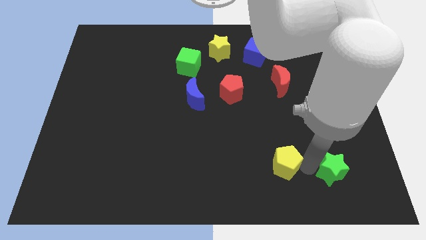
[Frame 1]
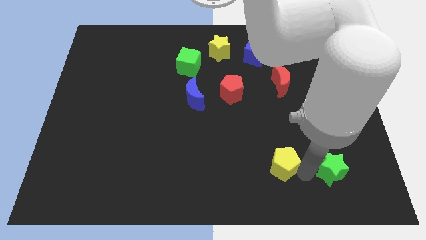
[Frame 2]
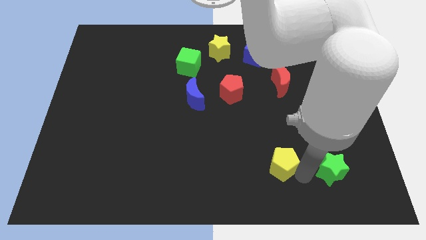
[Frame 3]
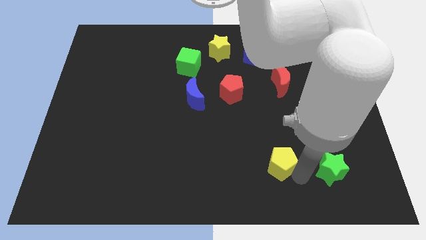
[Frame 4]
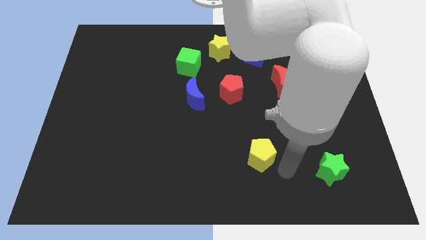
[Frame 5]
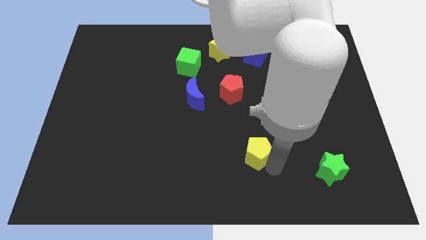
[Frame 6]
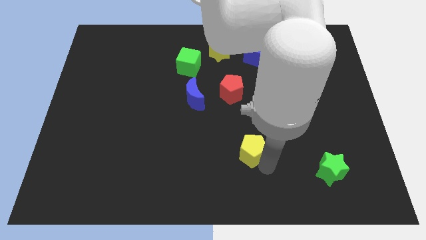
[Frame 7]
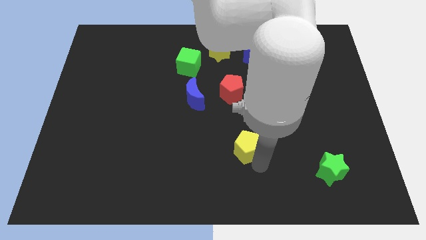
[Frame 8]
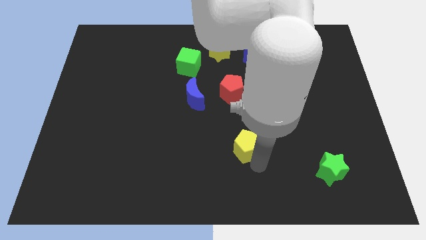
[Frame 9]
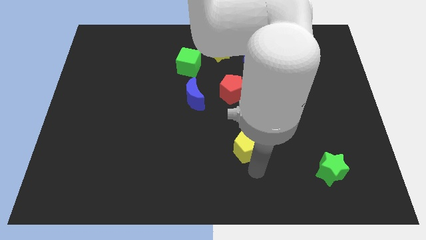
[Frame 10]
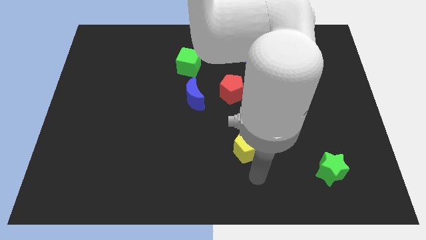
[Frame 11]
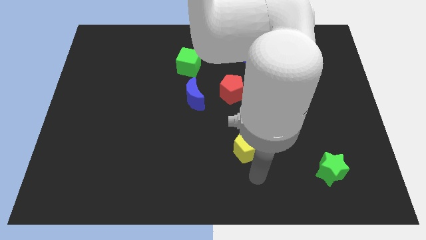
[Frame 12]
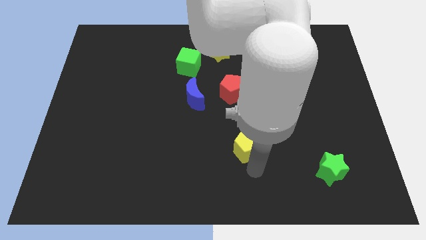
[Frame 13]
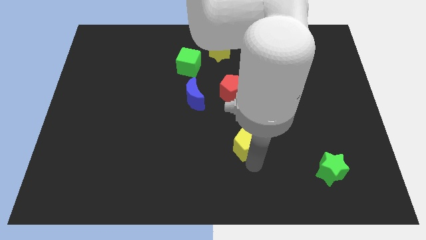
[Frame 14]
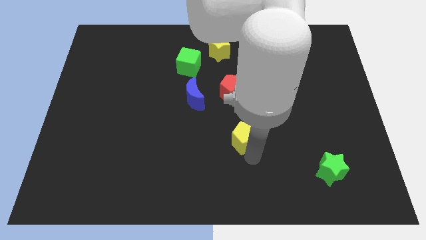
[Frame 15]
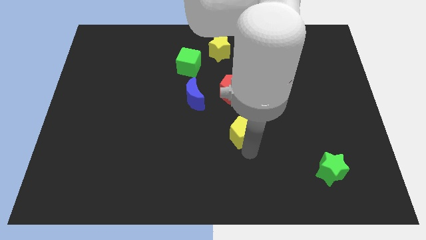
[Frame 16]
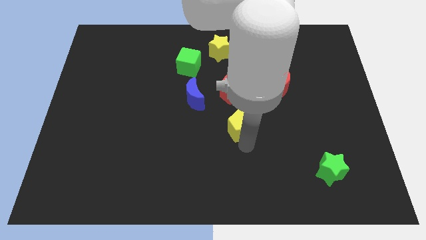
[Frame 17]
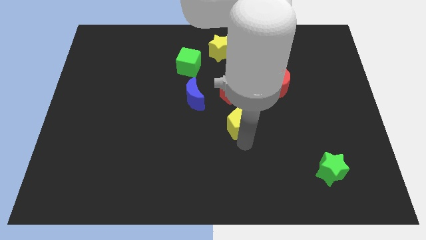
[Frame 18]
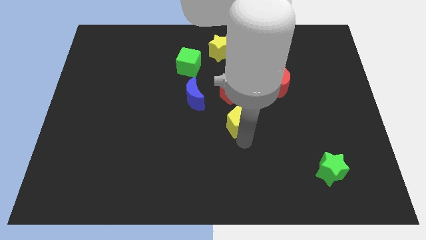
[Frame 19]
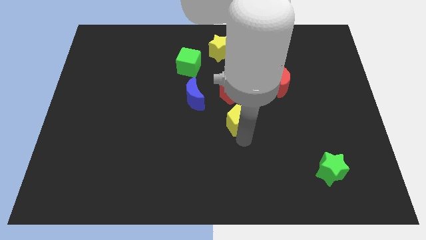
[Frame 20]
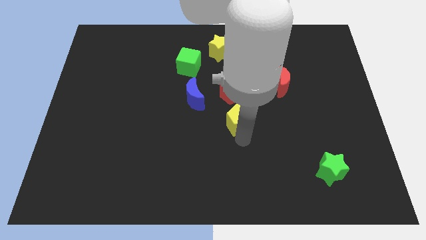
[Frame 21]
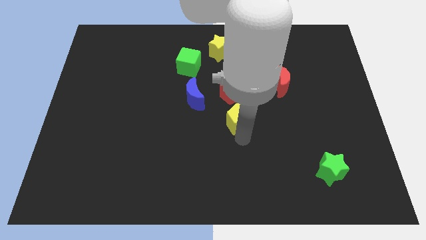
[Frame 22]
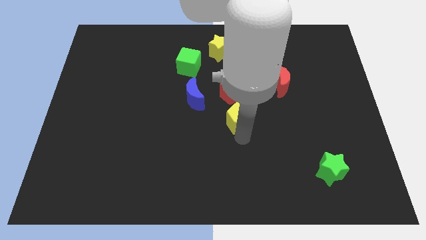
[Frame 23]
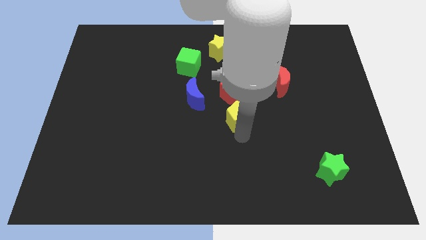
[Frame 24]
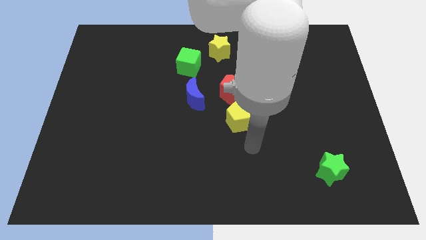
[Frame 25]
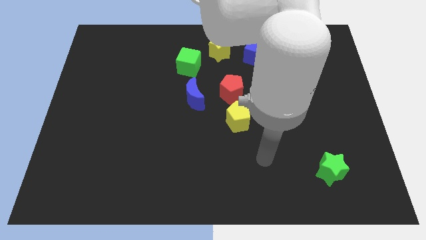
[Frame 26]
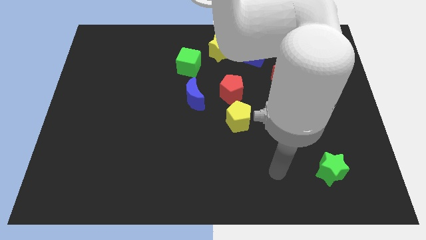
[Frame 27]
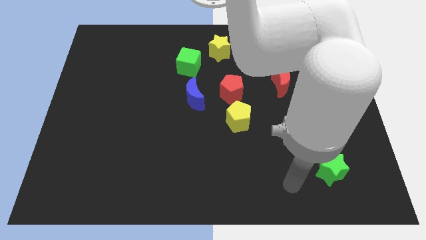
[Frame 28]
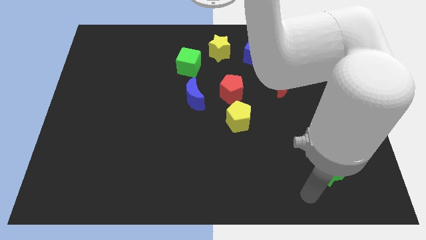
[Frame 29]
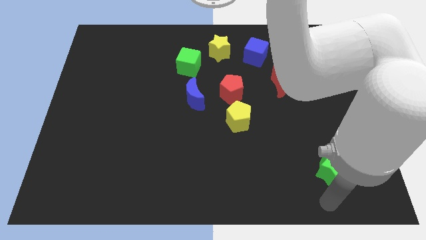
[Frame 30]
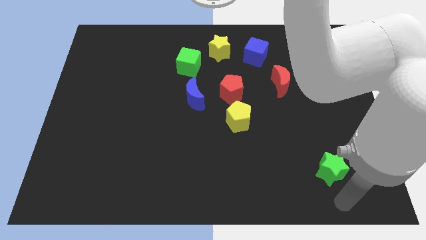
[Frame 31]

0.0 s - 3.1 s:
separate yellow pentagon from green star

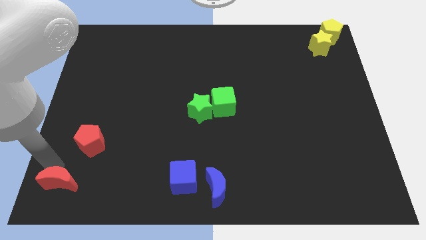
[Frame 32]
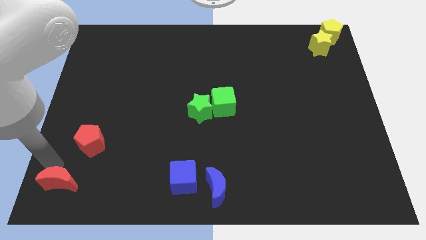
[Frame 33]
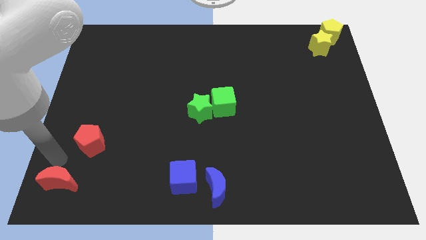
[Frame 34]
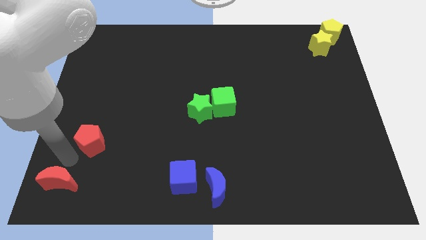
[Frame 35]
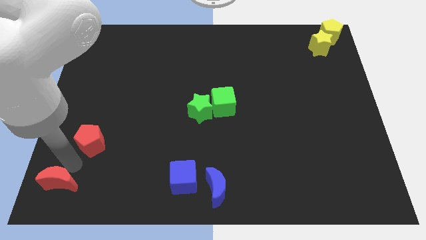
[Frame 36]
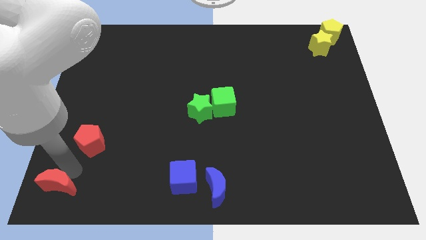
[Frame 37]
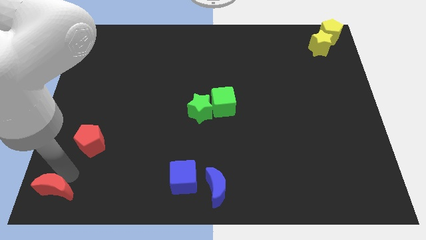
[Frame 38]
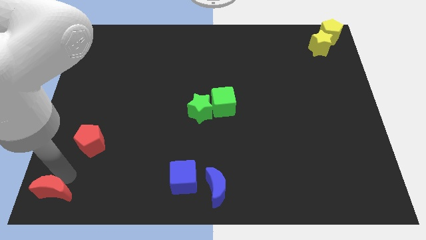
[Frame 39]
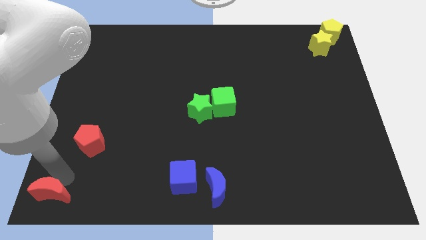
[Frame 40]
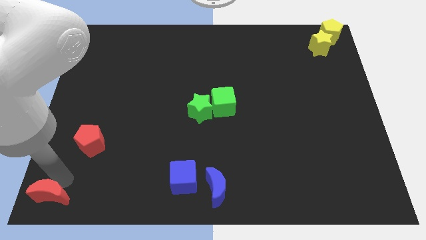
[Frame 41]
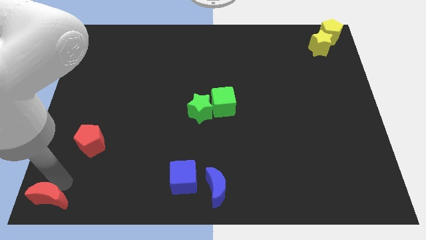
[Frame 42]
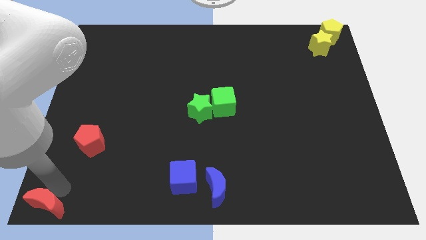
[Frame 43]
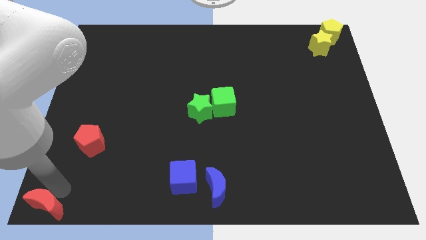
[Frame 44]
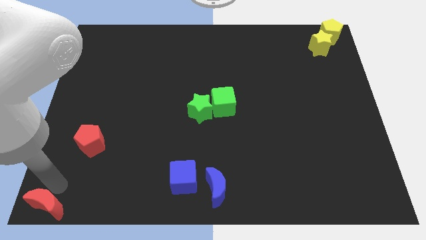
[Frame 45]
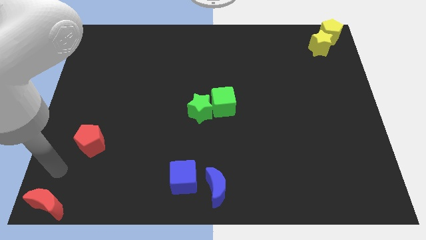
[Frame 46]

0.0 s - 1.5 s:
move the red crescent to the left bottom of the board

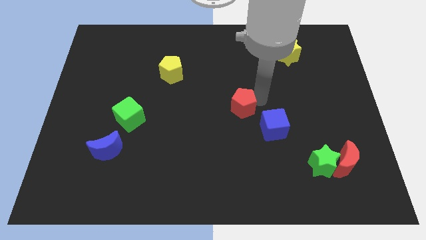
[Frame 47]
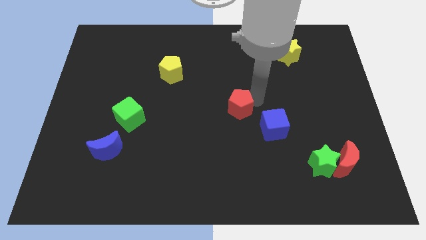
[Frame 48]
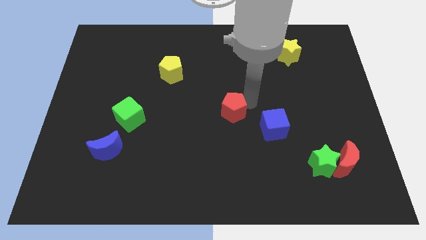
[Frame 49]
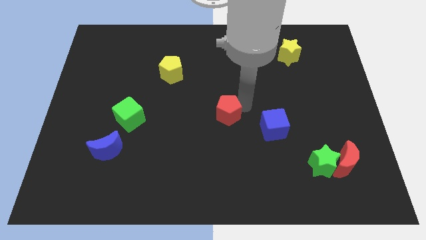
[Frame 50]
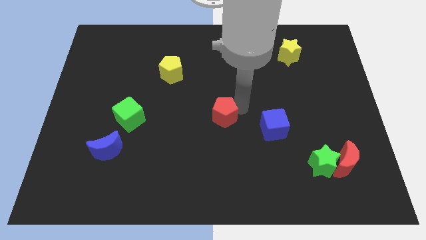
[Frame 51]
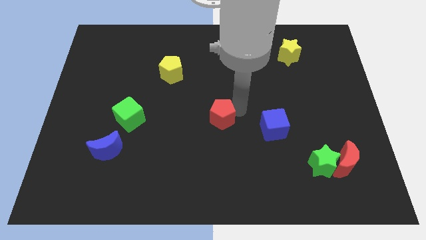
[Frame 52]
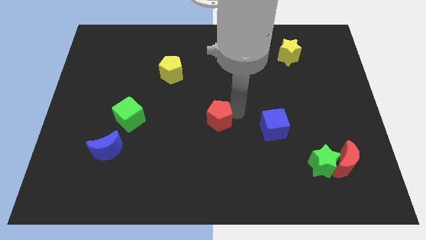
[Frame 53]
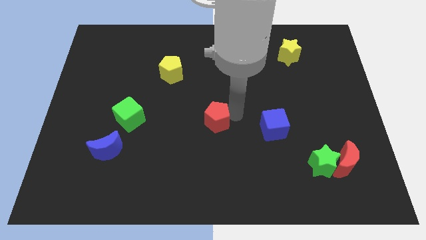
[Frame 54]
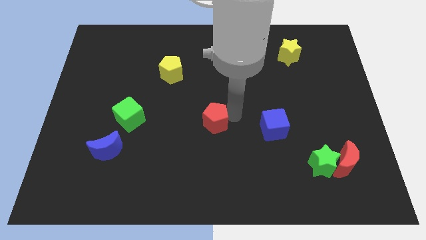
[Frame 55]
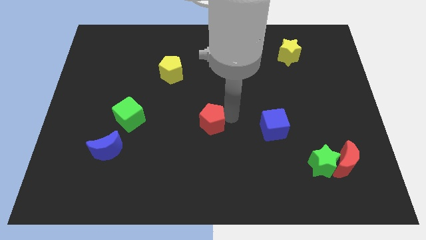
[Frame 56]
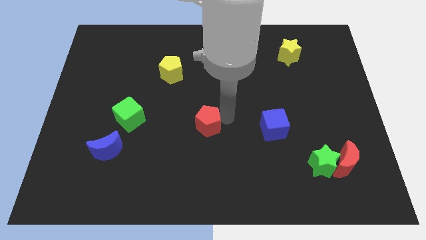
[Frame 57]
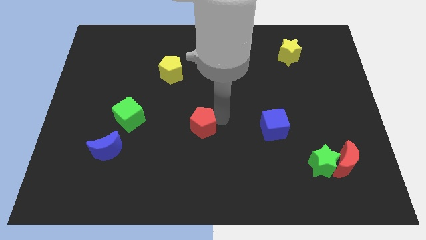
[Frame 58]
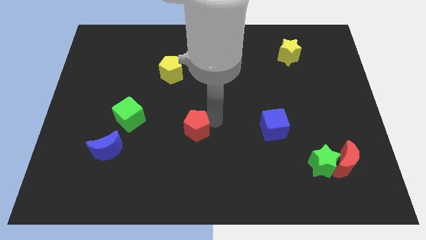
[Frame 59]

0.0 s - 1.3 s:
place red pentagon parallel to blue cube

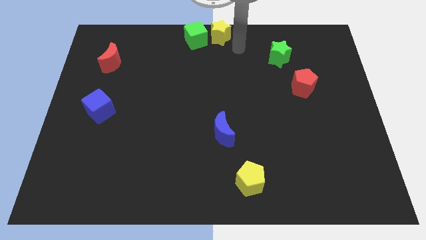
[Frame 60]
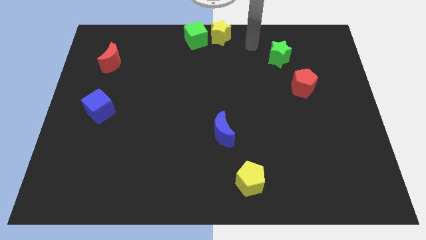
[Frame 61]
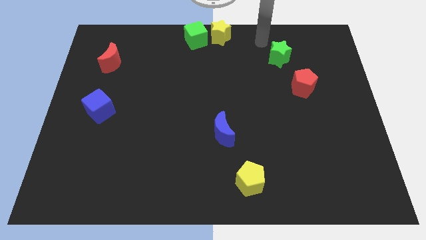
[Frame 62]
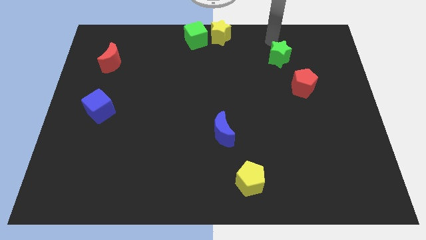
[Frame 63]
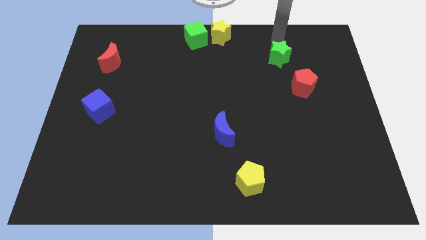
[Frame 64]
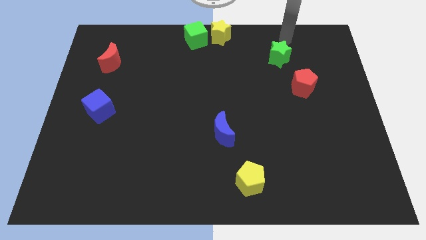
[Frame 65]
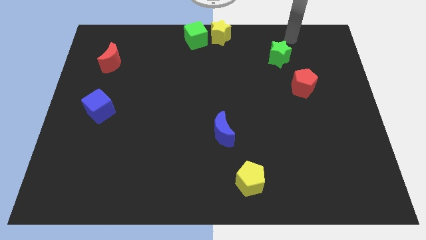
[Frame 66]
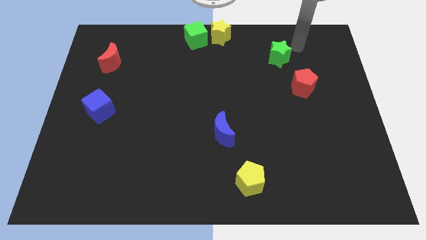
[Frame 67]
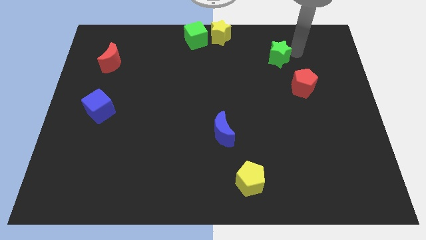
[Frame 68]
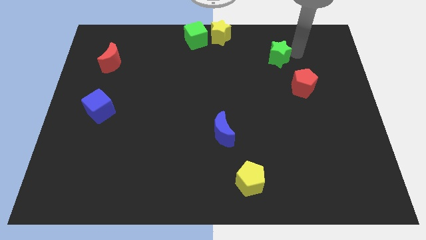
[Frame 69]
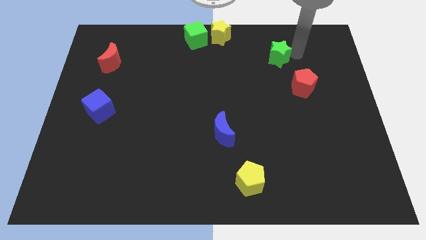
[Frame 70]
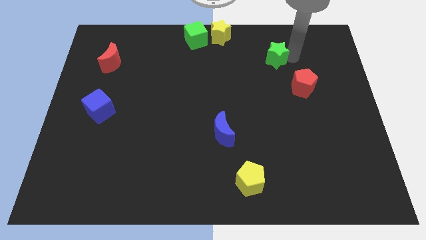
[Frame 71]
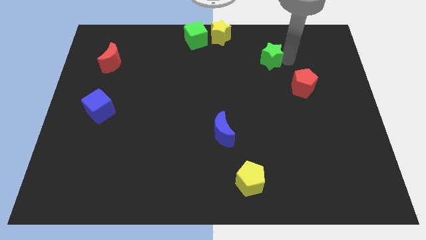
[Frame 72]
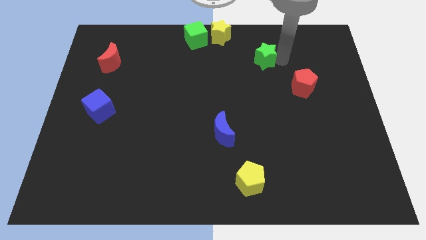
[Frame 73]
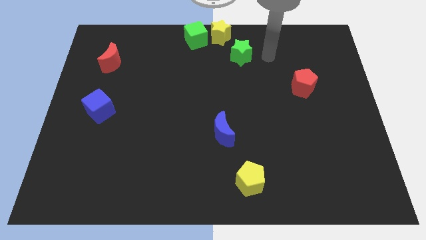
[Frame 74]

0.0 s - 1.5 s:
move the green star towards the yellow star

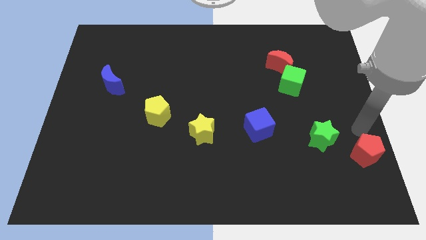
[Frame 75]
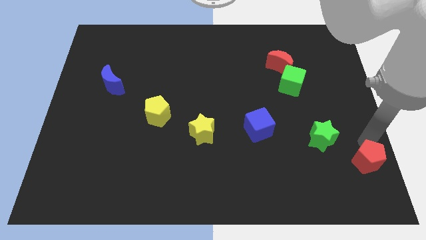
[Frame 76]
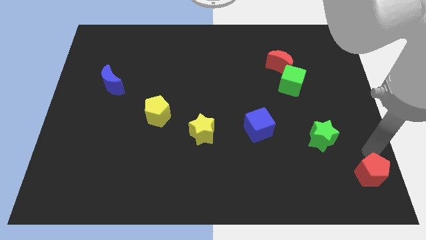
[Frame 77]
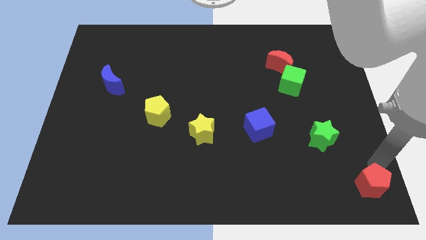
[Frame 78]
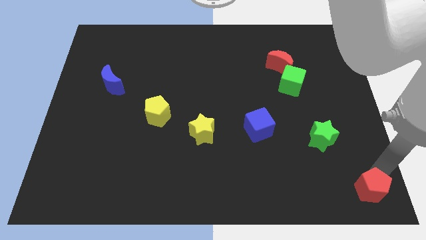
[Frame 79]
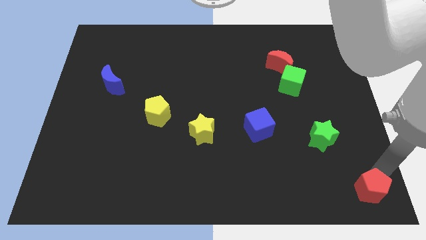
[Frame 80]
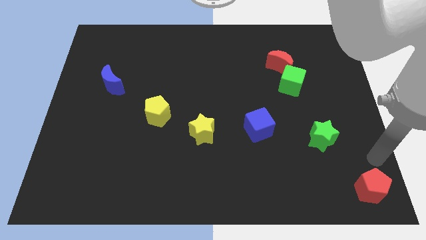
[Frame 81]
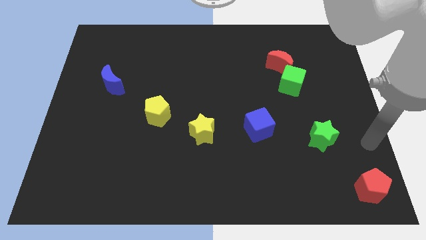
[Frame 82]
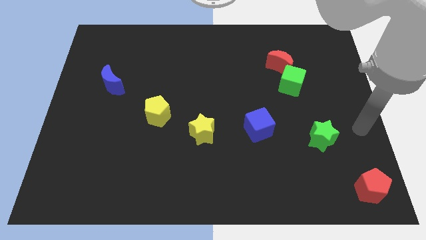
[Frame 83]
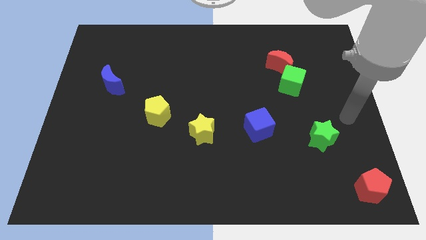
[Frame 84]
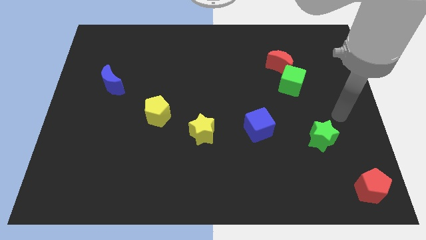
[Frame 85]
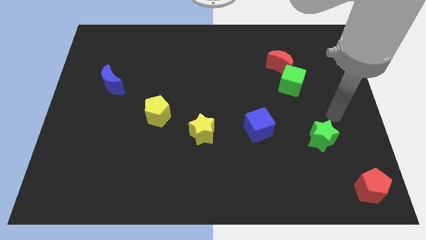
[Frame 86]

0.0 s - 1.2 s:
move the red pentagon towards the bottom right corner of the board

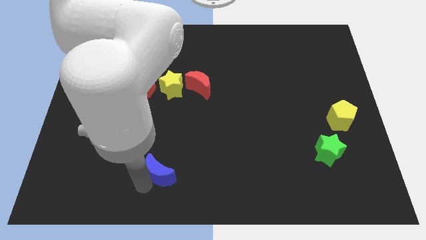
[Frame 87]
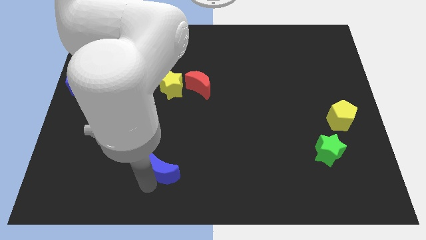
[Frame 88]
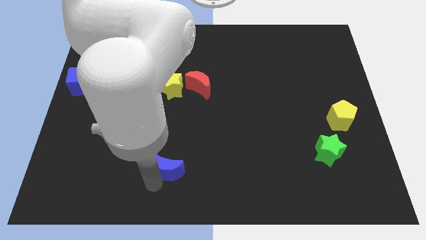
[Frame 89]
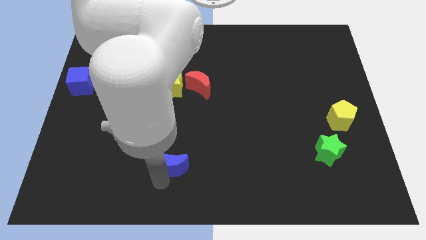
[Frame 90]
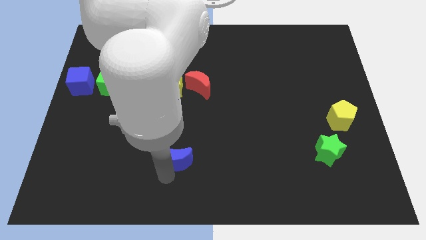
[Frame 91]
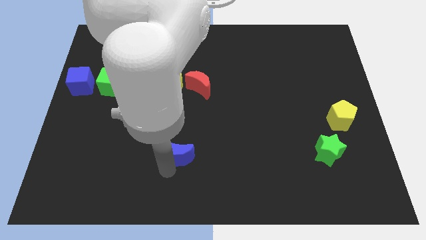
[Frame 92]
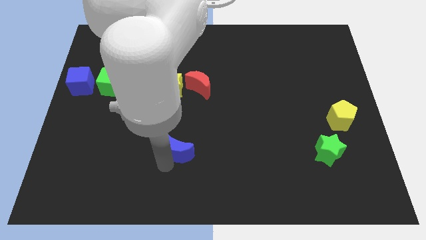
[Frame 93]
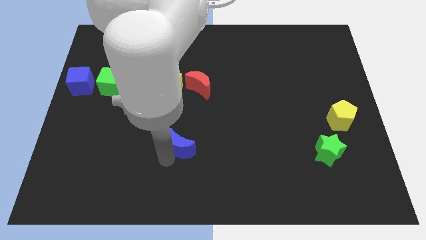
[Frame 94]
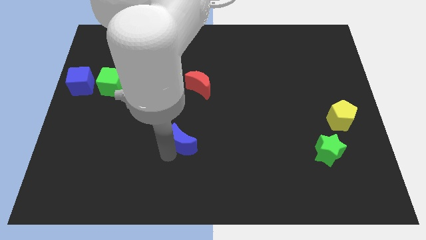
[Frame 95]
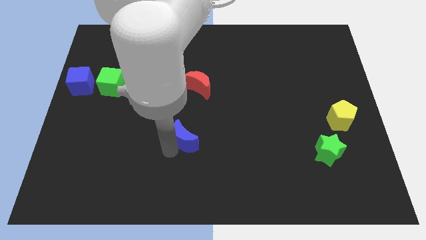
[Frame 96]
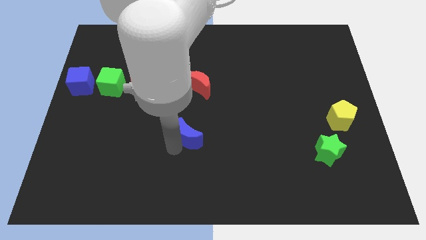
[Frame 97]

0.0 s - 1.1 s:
move the blue crescent towards the red crescent
